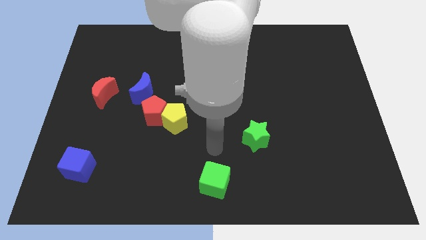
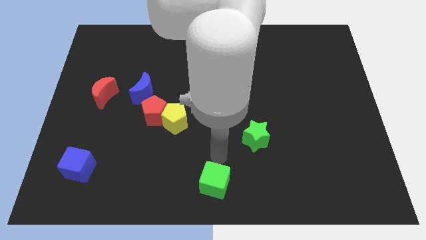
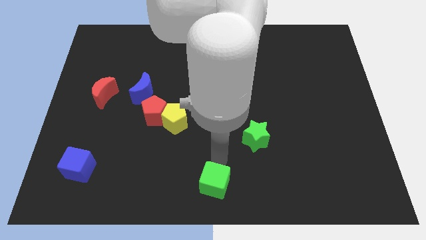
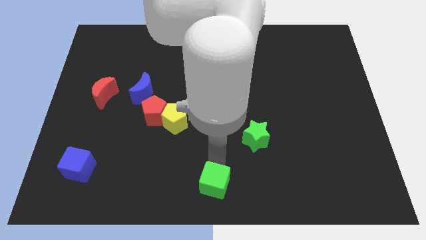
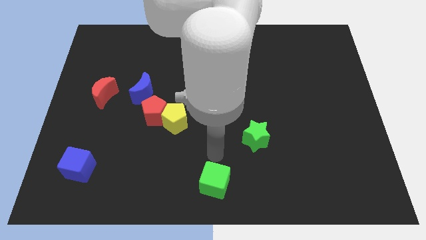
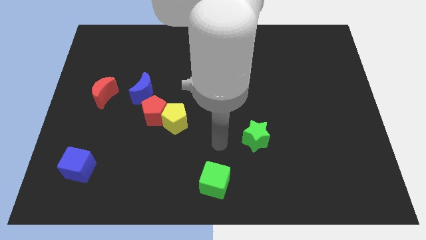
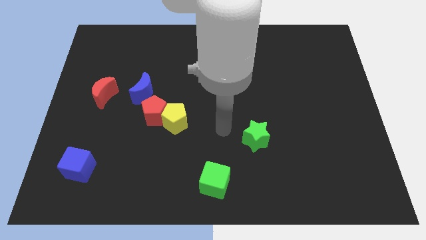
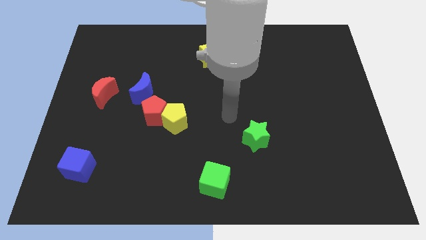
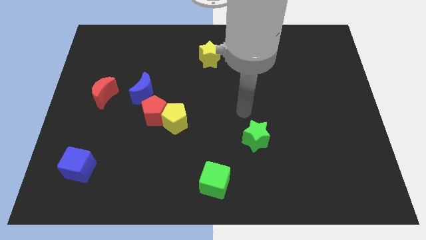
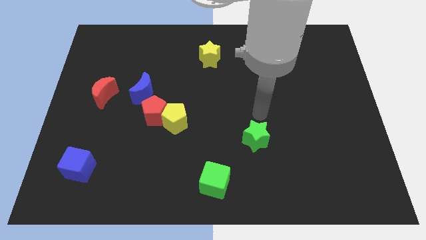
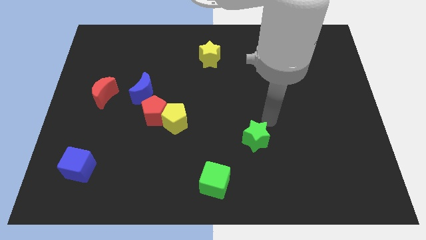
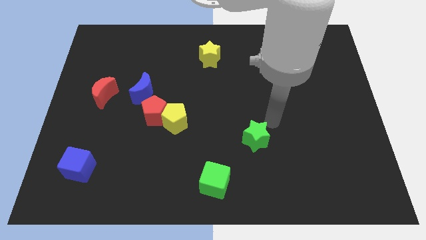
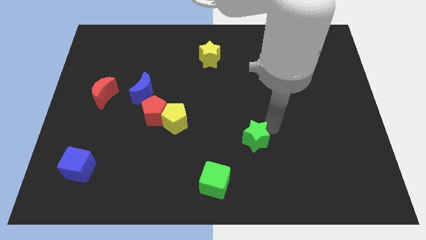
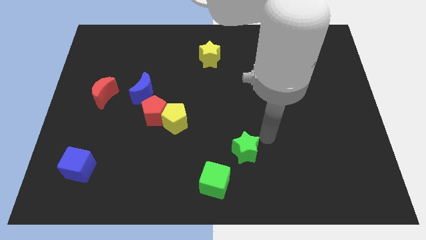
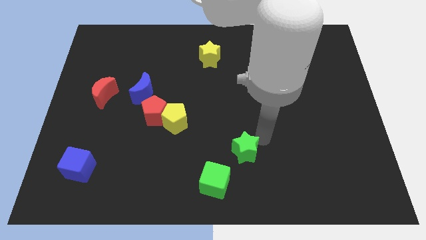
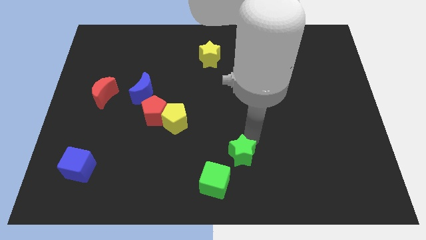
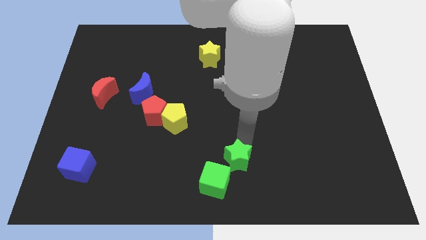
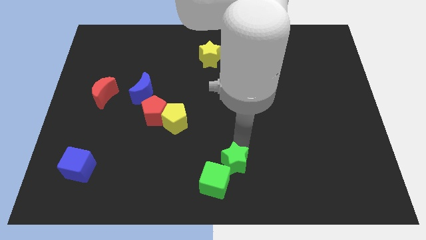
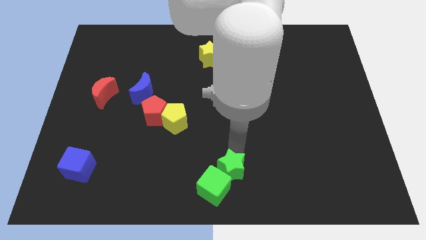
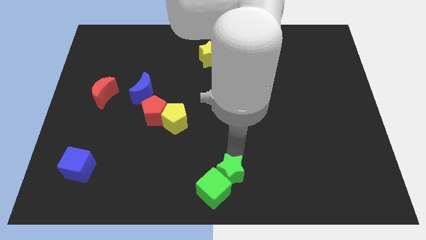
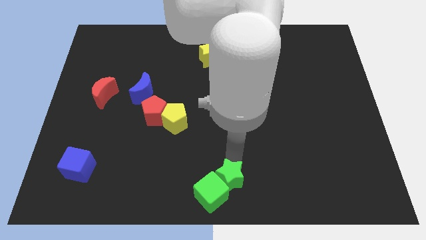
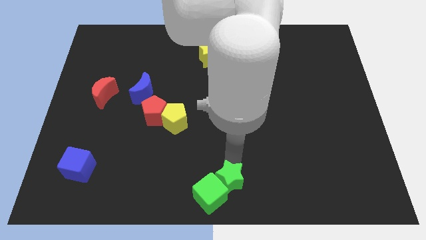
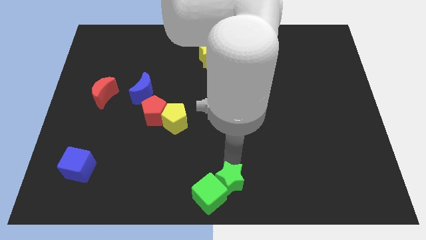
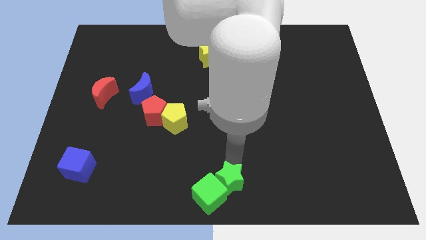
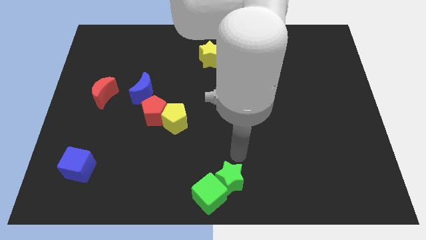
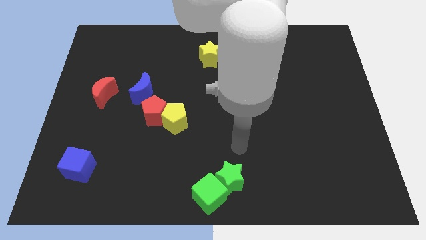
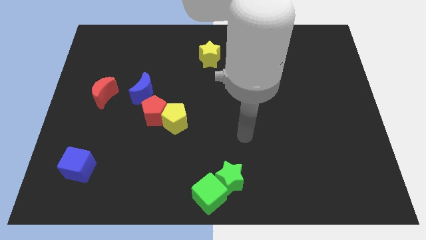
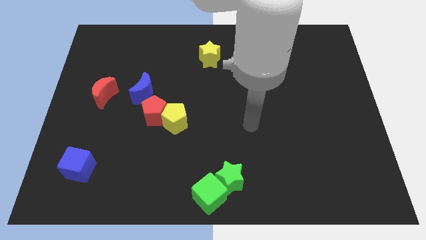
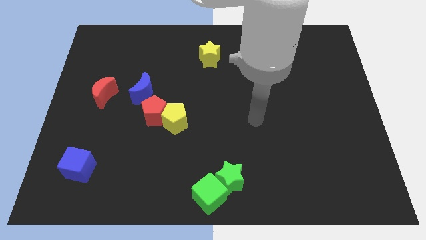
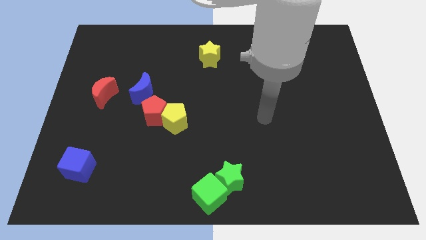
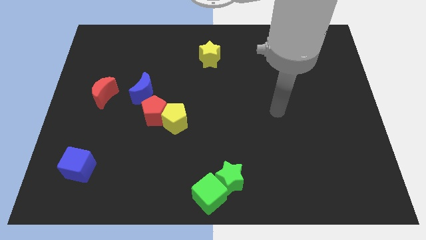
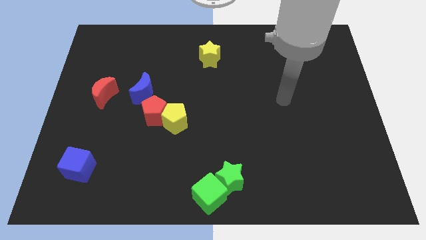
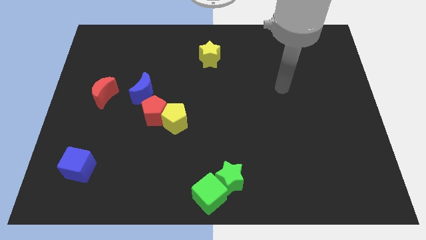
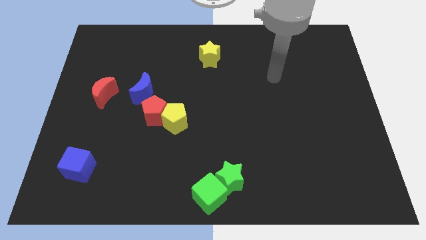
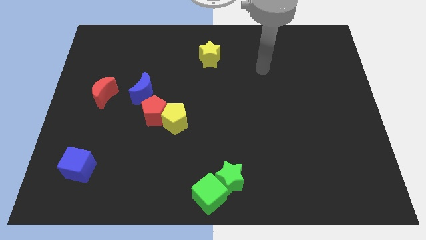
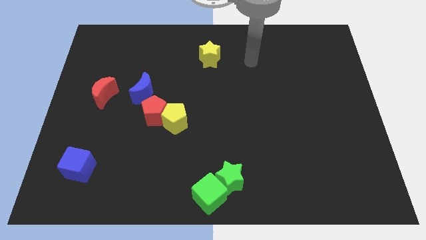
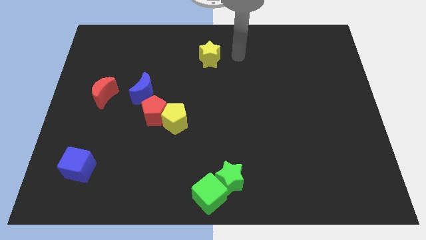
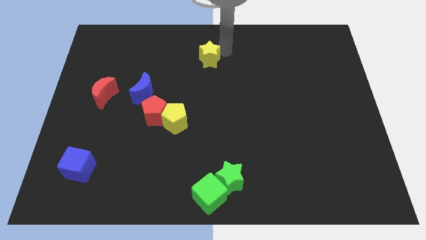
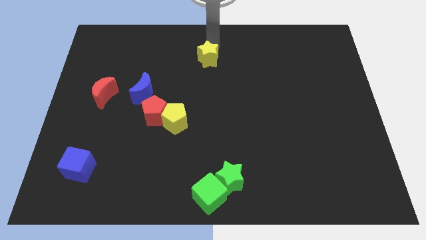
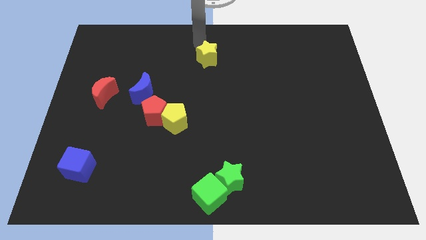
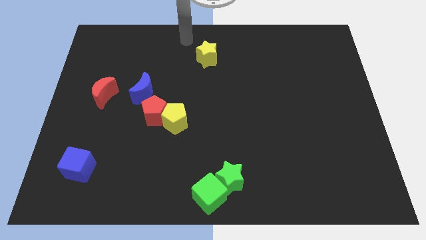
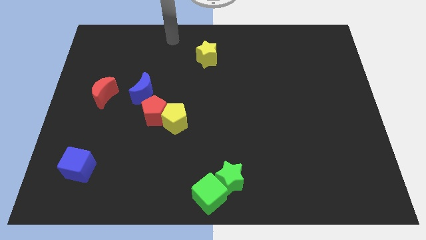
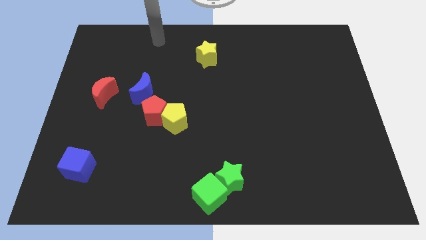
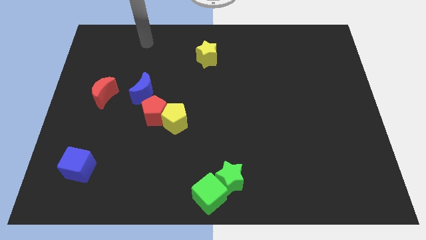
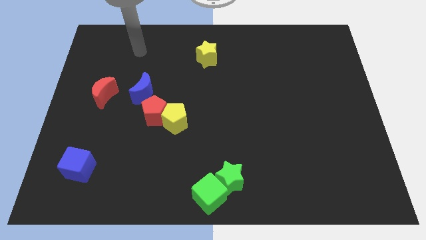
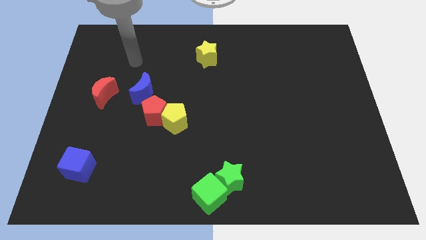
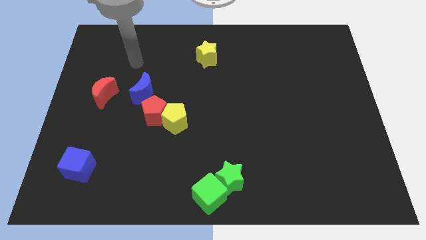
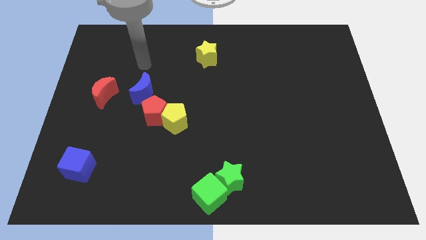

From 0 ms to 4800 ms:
move the green star to the top right side of the green cube

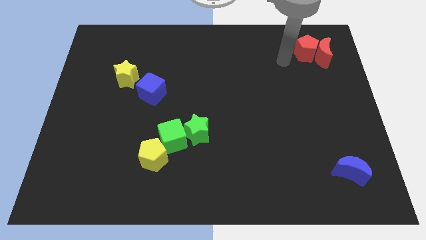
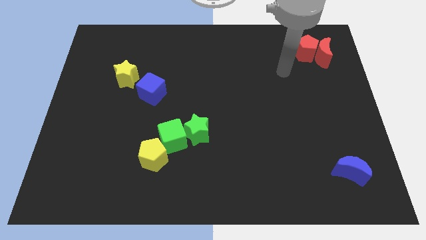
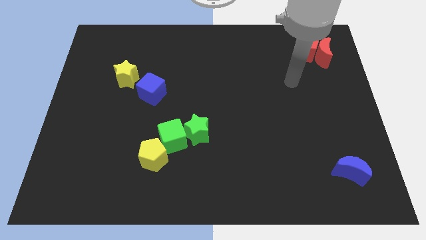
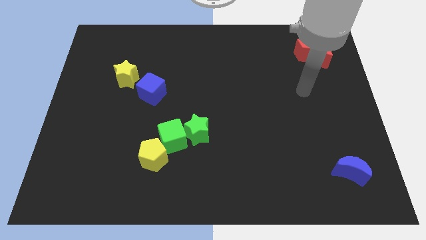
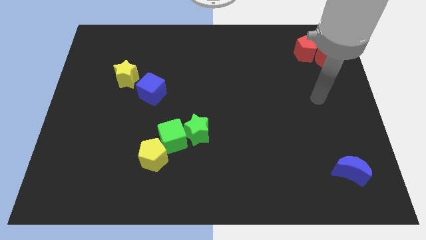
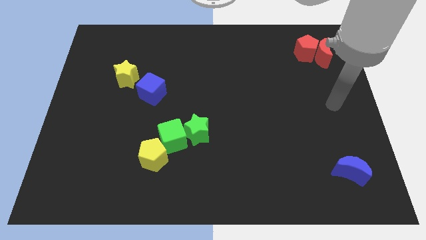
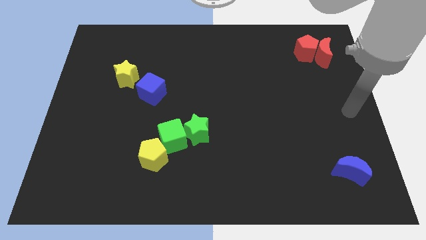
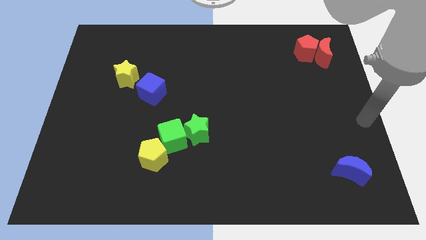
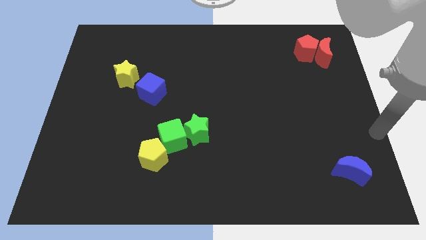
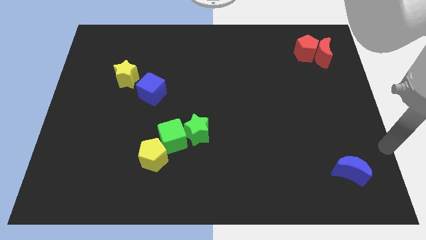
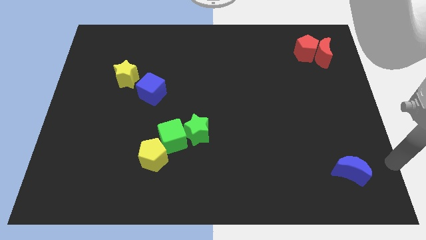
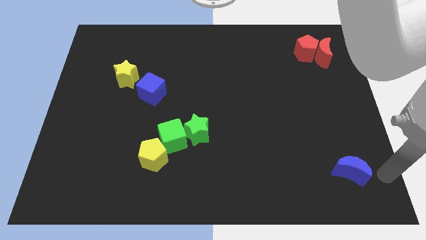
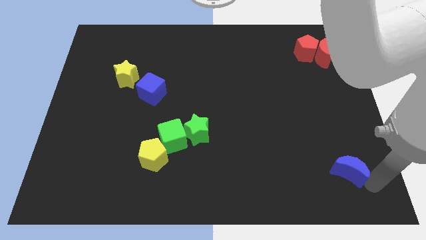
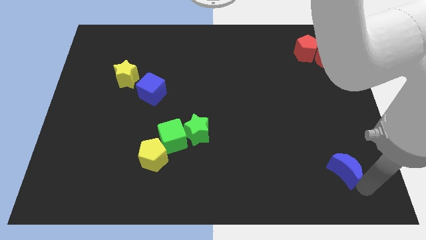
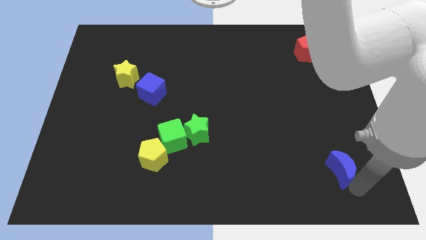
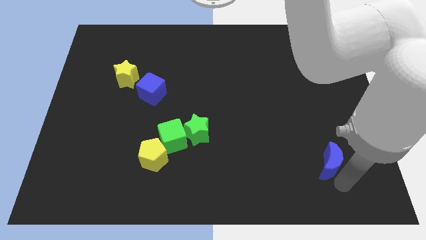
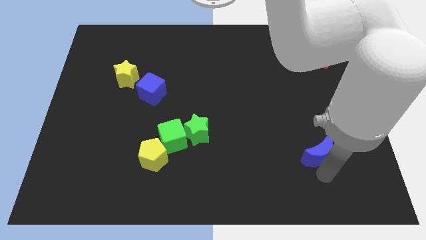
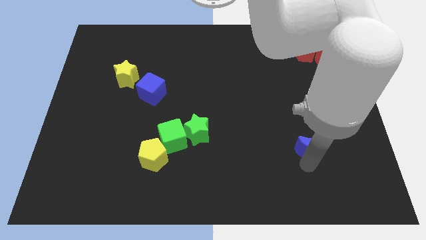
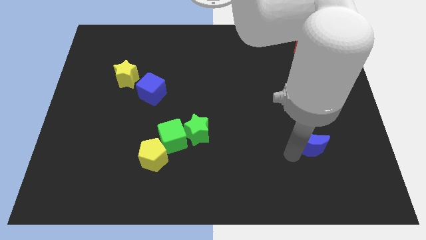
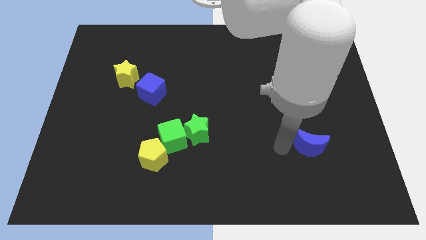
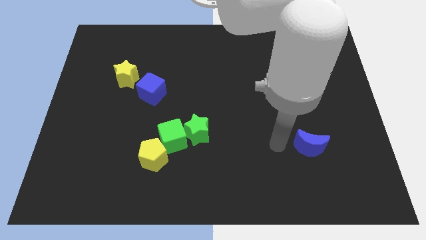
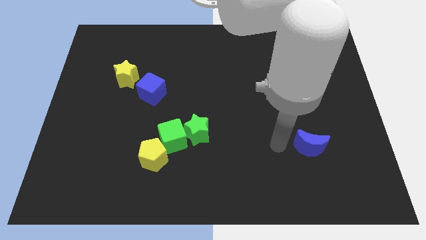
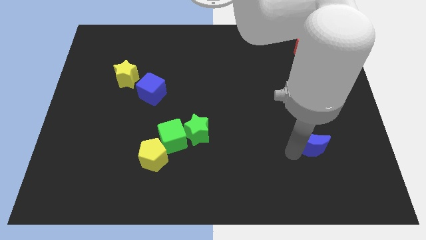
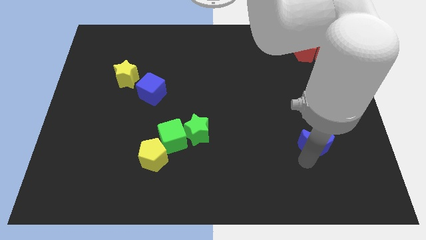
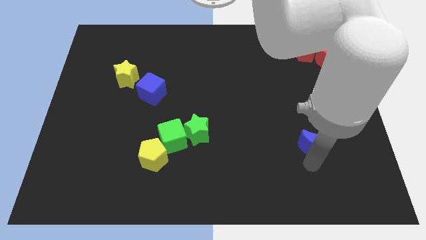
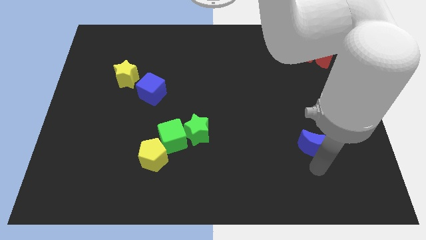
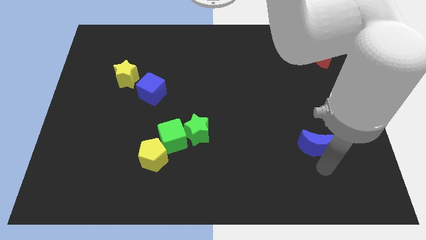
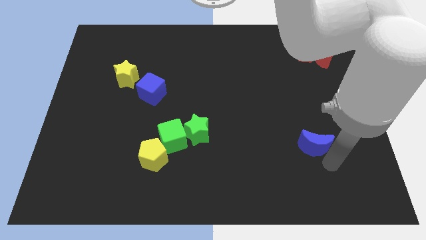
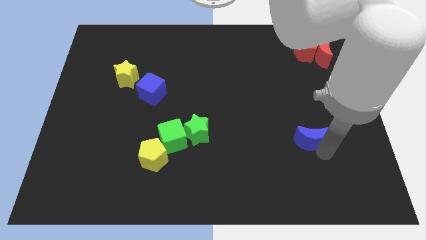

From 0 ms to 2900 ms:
push the blue moon upward

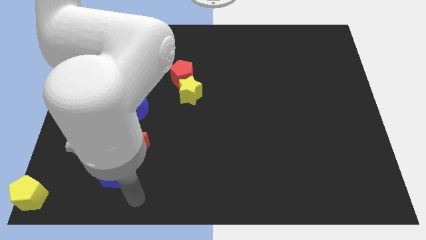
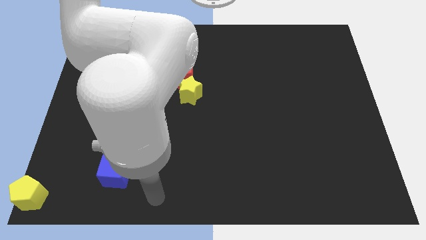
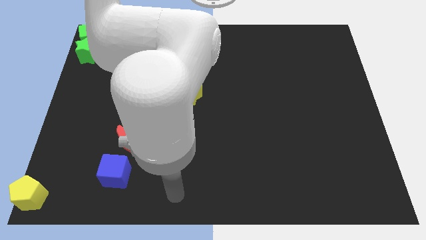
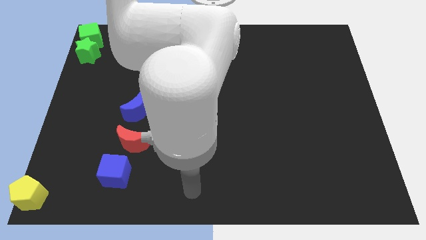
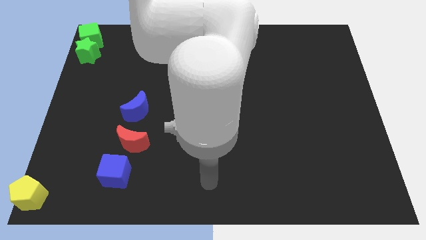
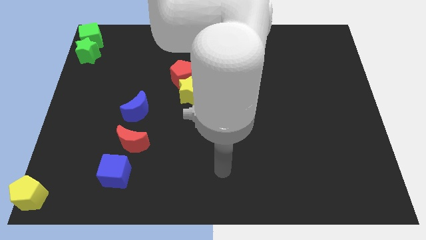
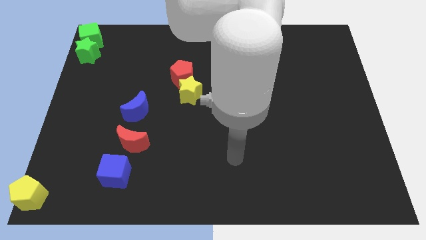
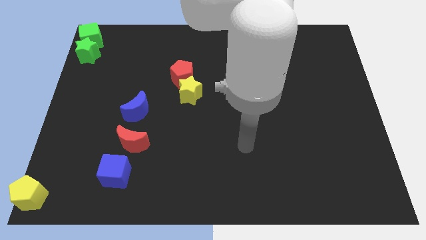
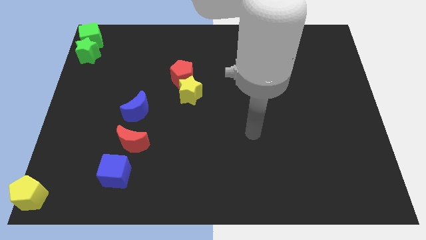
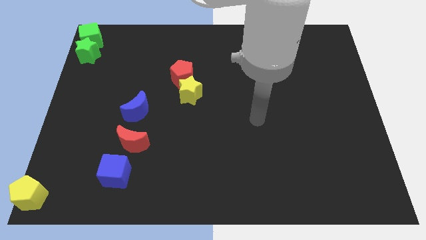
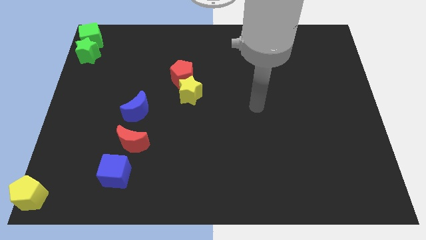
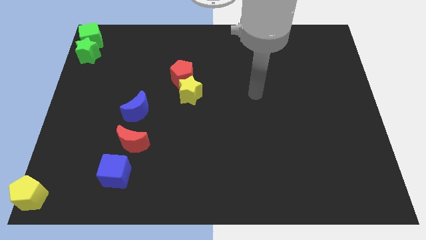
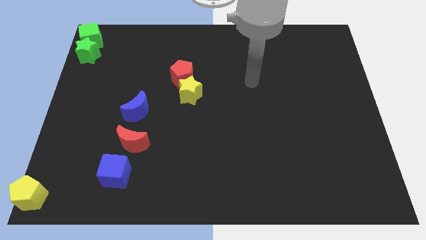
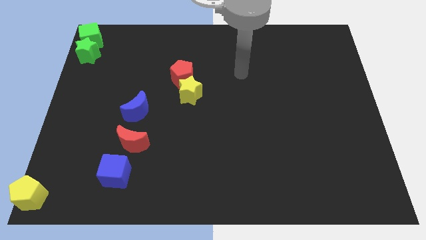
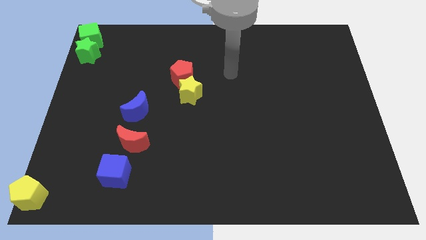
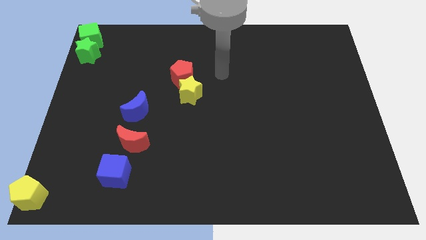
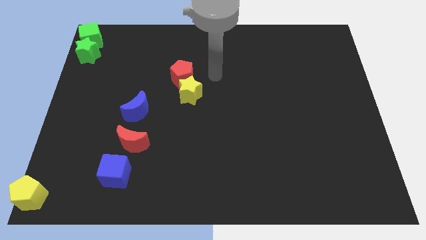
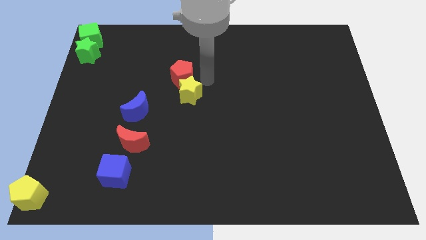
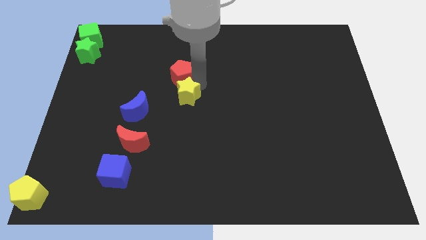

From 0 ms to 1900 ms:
slide the arm towards the top of the yellow star
